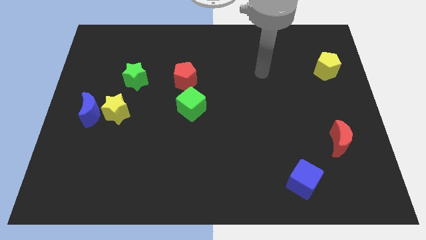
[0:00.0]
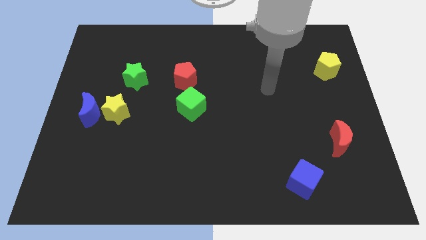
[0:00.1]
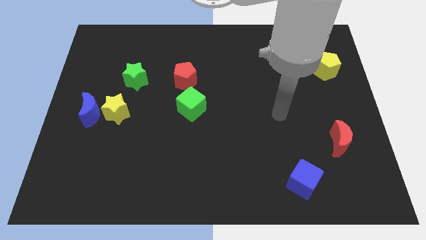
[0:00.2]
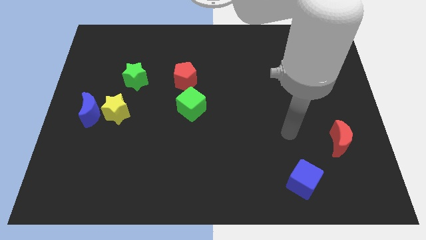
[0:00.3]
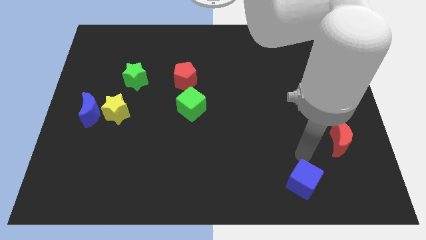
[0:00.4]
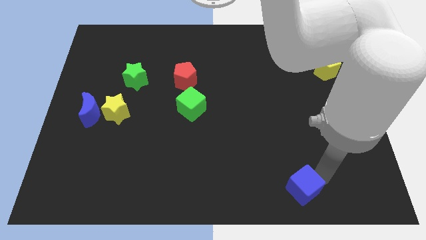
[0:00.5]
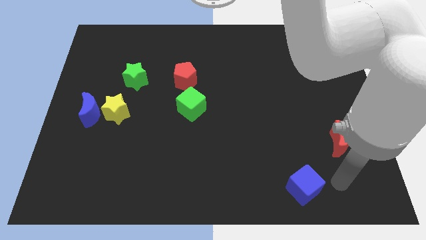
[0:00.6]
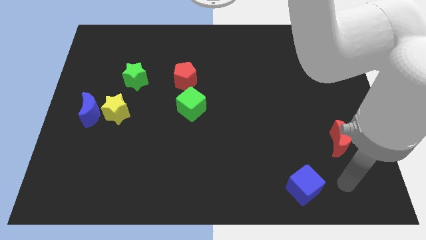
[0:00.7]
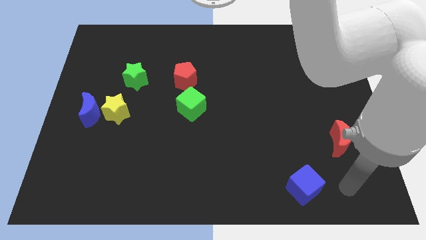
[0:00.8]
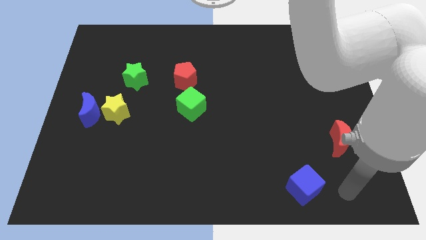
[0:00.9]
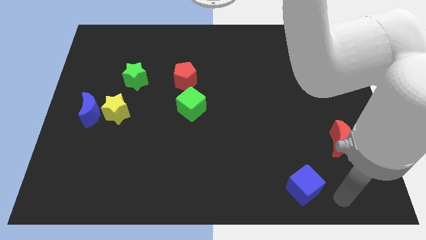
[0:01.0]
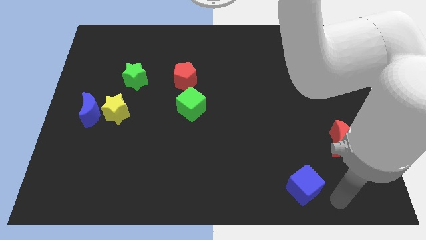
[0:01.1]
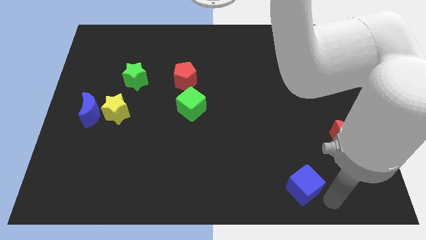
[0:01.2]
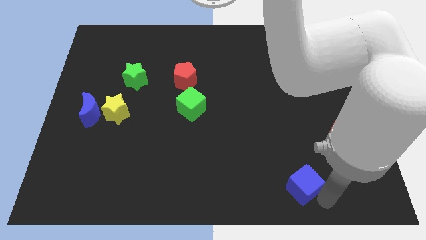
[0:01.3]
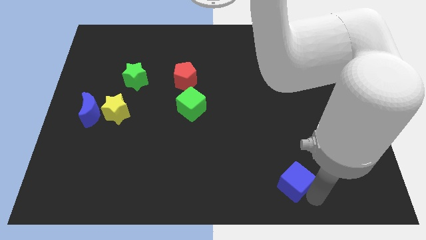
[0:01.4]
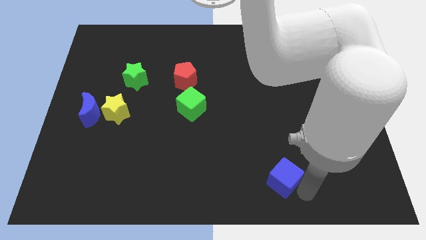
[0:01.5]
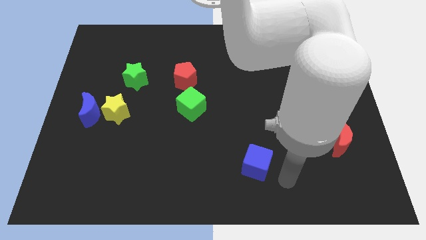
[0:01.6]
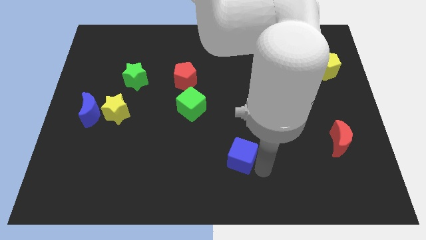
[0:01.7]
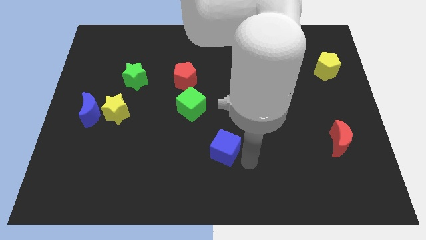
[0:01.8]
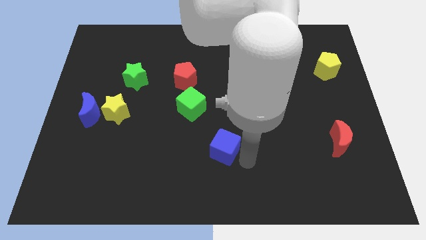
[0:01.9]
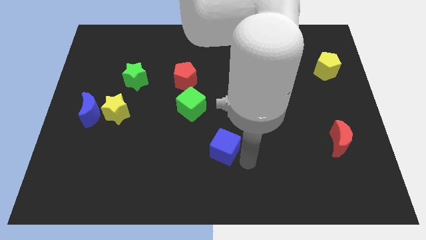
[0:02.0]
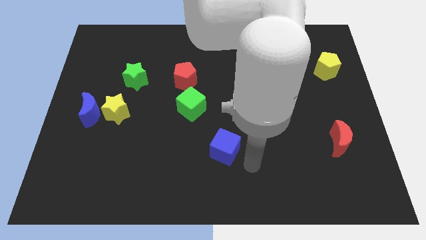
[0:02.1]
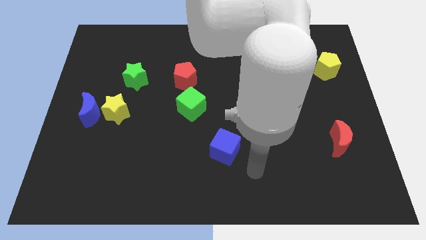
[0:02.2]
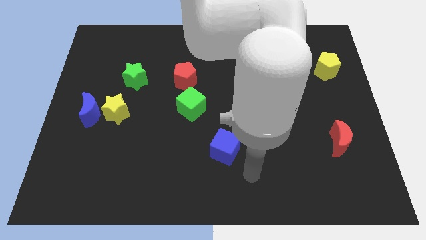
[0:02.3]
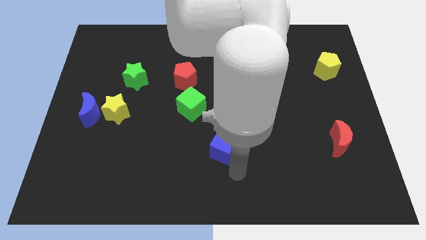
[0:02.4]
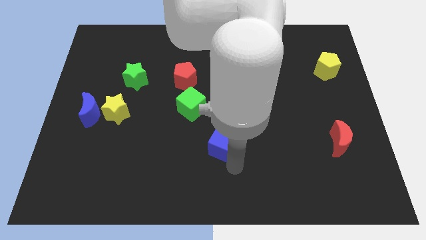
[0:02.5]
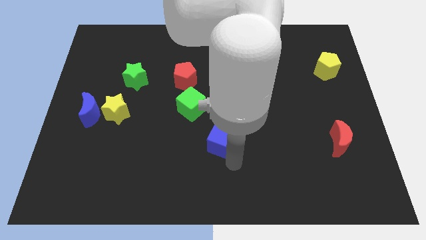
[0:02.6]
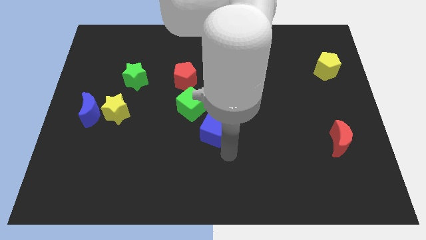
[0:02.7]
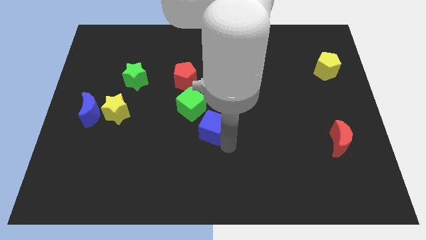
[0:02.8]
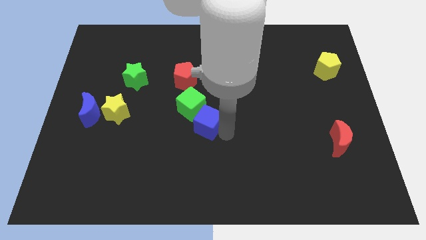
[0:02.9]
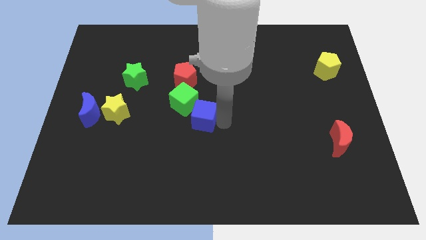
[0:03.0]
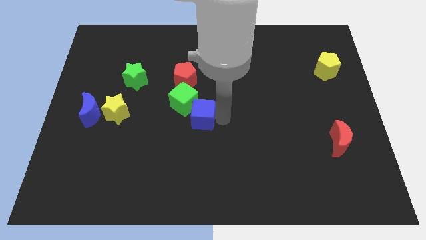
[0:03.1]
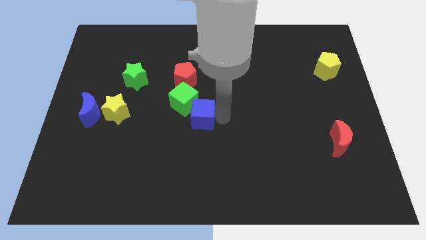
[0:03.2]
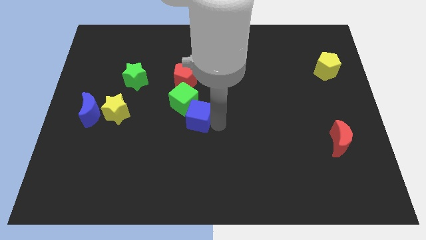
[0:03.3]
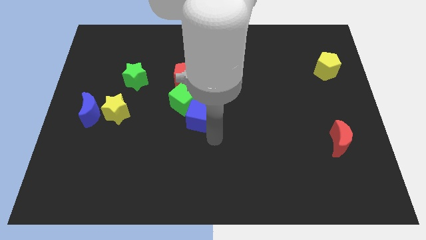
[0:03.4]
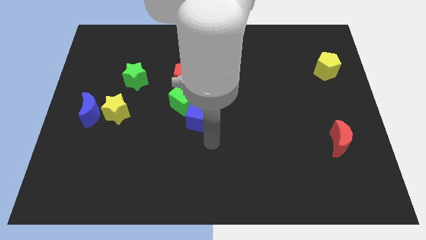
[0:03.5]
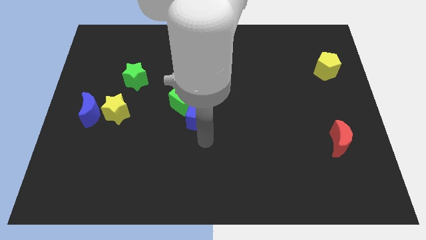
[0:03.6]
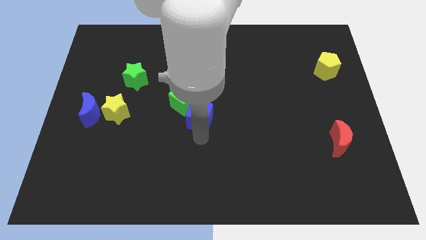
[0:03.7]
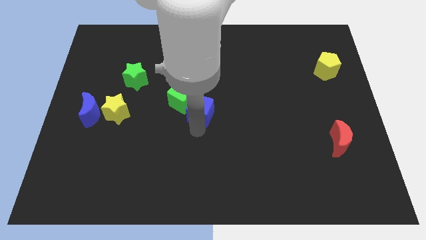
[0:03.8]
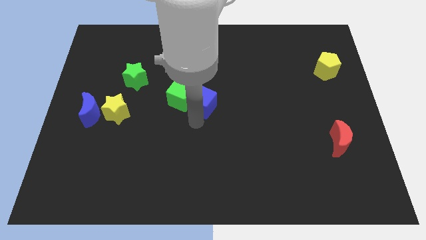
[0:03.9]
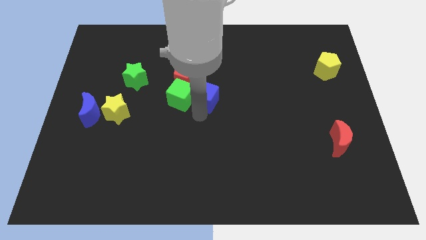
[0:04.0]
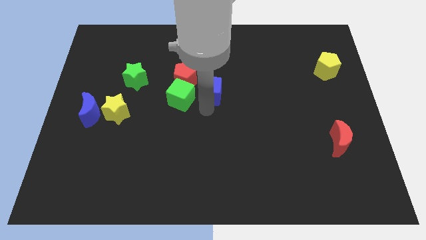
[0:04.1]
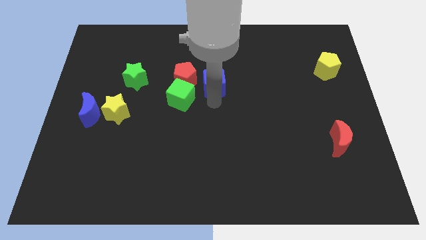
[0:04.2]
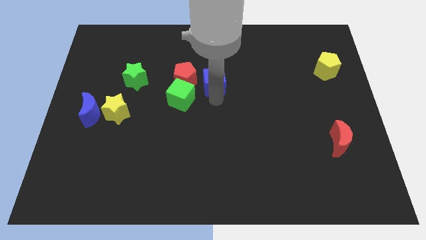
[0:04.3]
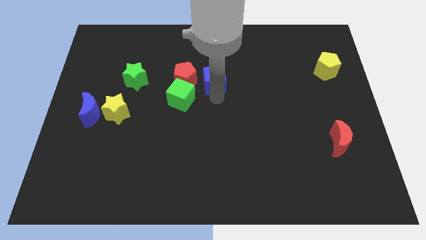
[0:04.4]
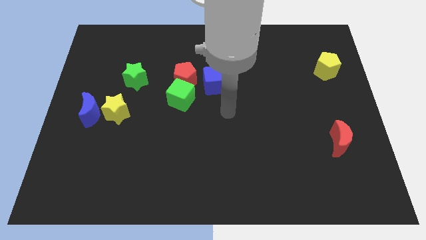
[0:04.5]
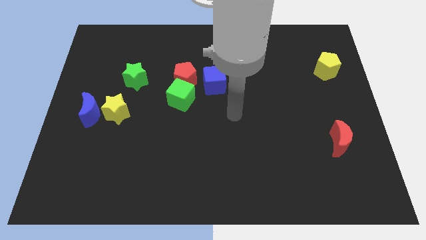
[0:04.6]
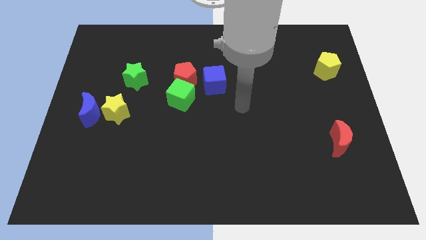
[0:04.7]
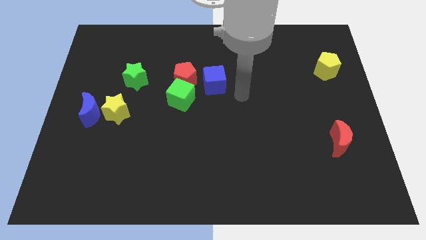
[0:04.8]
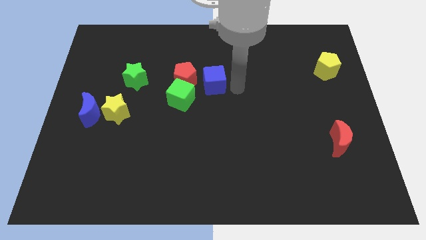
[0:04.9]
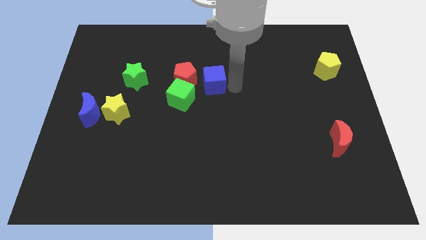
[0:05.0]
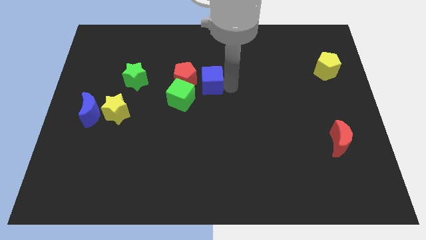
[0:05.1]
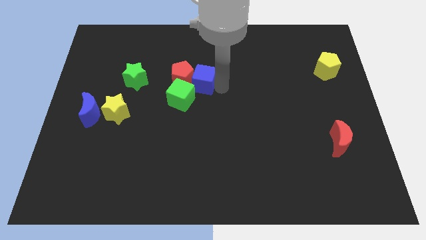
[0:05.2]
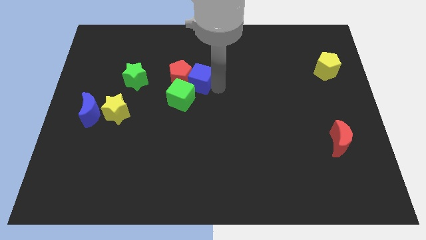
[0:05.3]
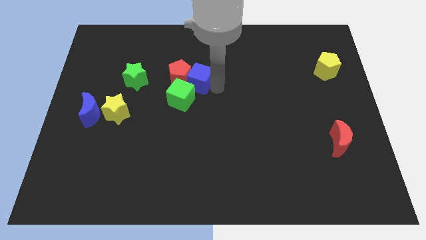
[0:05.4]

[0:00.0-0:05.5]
push the blue cube next to the red pentagon

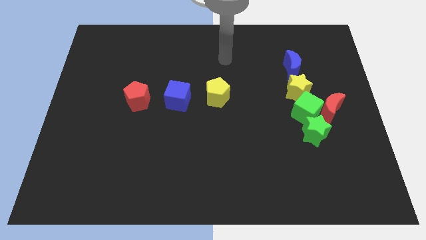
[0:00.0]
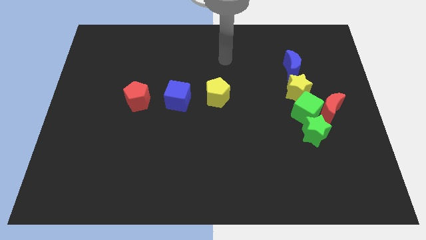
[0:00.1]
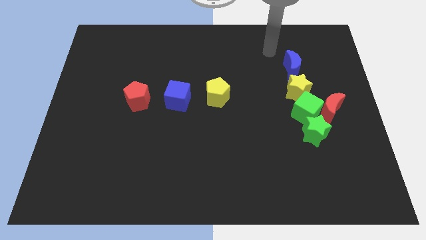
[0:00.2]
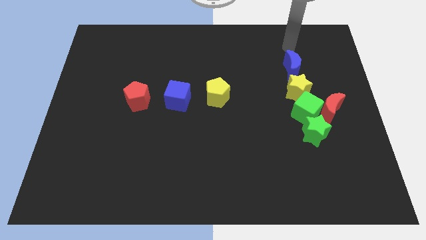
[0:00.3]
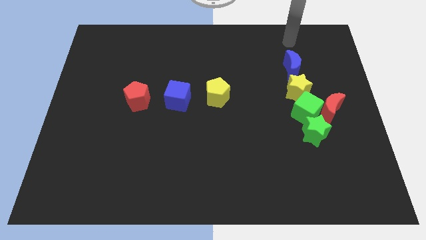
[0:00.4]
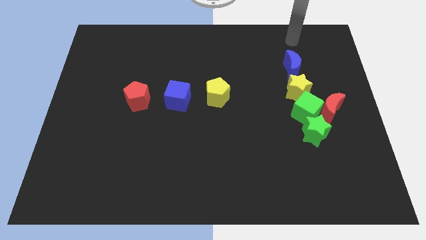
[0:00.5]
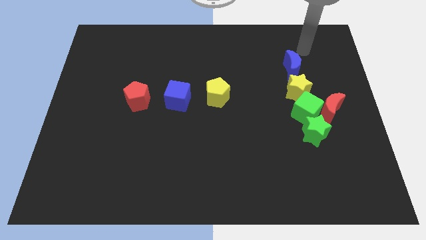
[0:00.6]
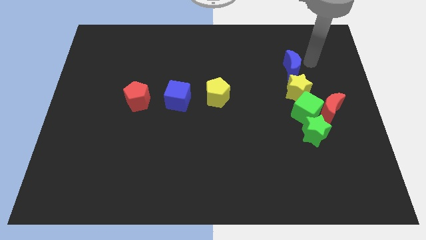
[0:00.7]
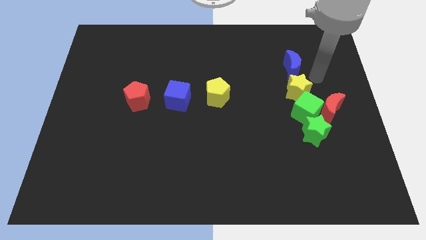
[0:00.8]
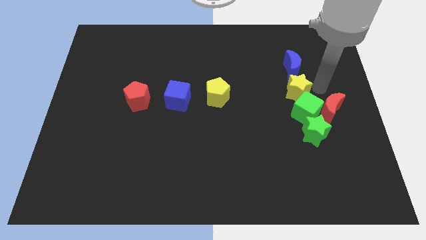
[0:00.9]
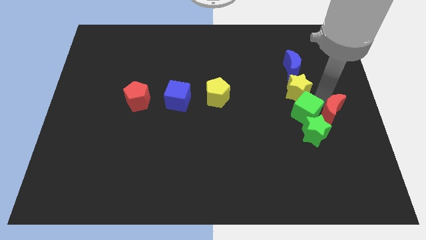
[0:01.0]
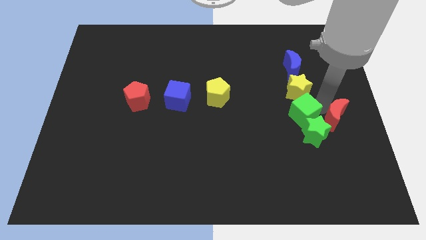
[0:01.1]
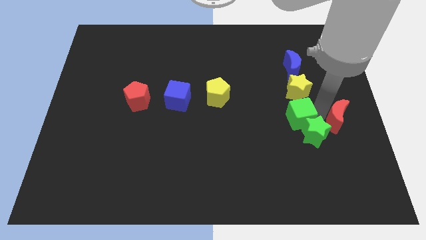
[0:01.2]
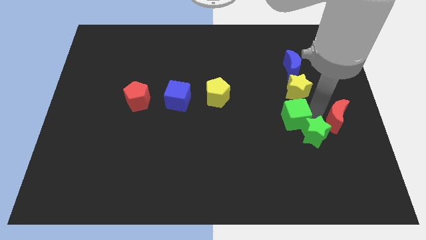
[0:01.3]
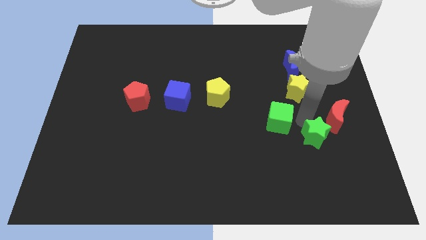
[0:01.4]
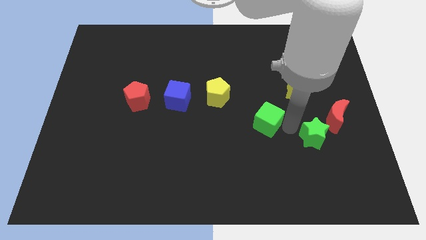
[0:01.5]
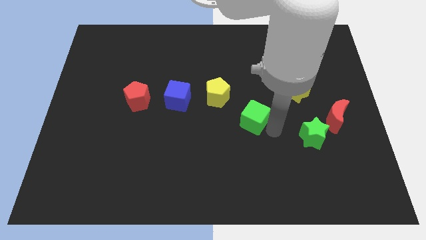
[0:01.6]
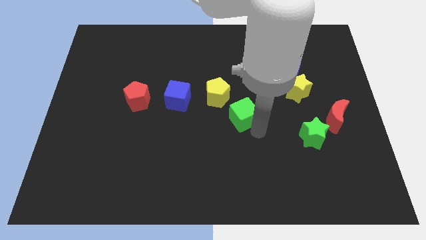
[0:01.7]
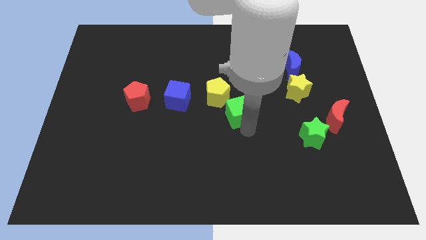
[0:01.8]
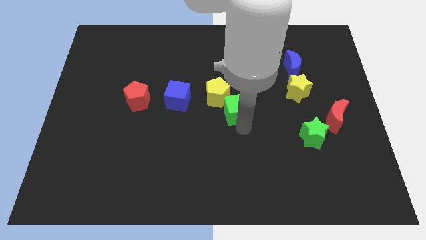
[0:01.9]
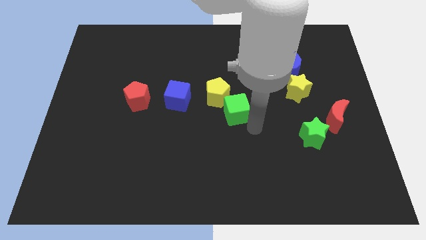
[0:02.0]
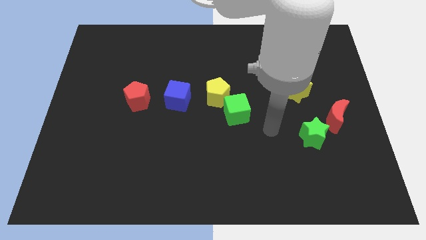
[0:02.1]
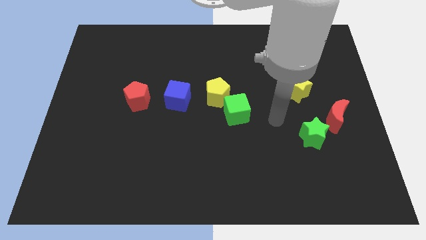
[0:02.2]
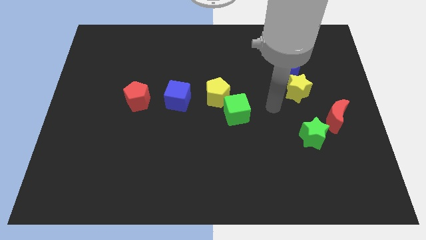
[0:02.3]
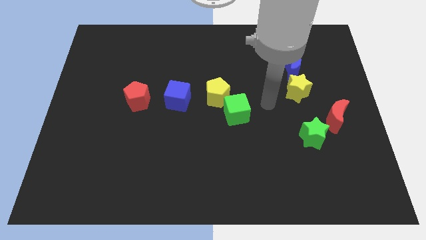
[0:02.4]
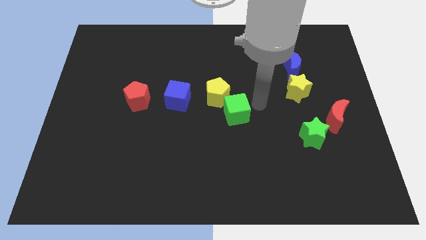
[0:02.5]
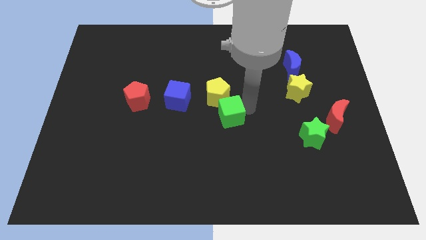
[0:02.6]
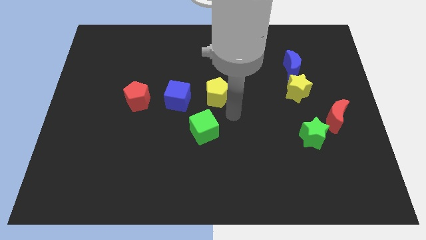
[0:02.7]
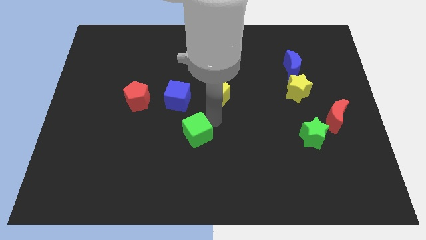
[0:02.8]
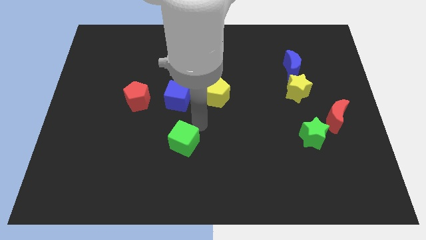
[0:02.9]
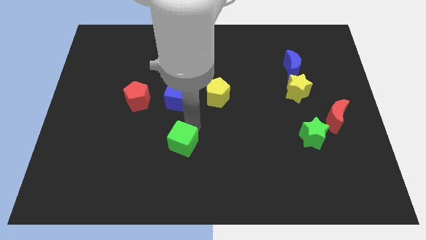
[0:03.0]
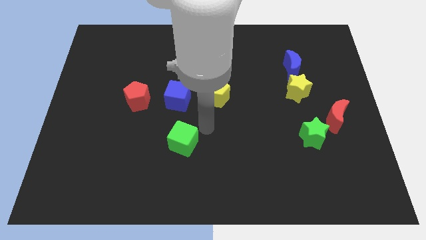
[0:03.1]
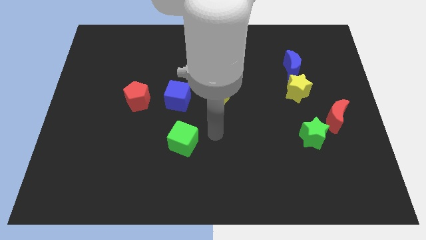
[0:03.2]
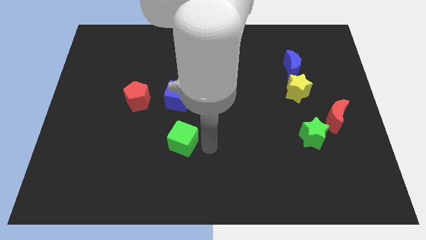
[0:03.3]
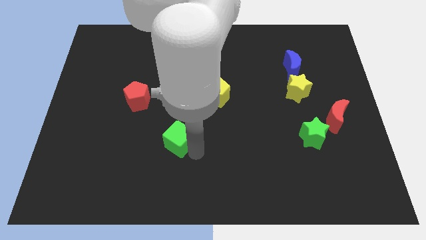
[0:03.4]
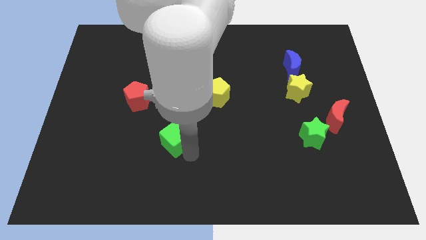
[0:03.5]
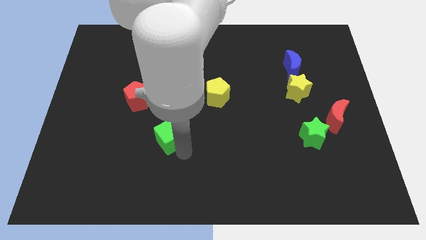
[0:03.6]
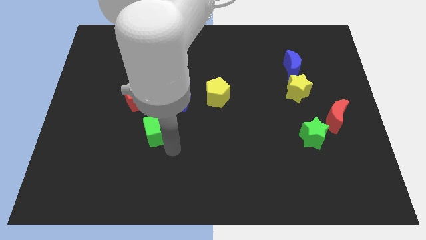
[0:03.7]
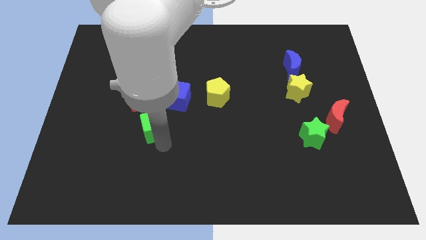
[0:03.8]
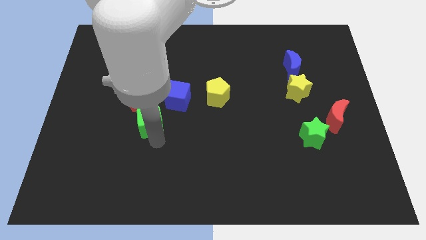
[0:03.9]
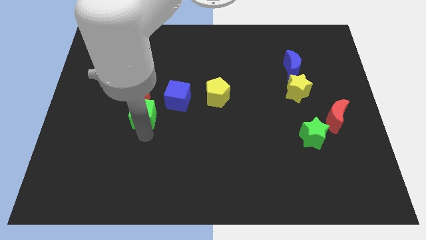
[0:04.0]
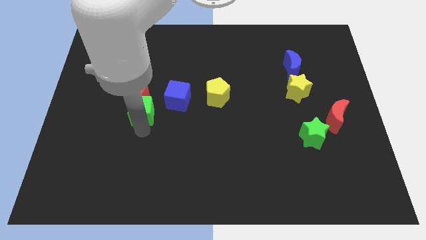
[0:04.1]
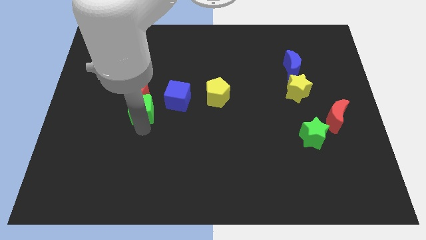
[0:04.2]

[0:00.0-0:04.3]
move the green cube towards the red pentagon
